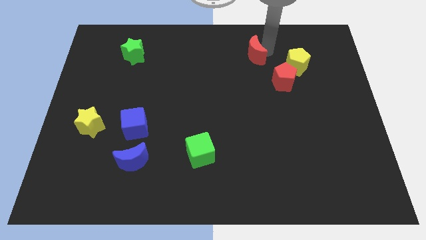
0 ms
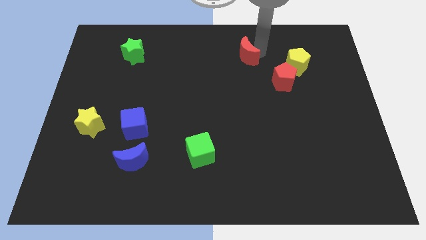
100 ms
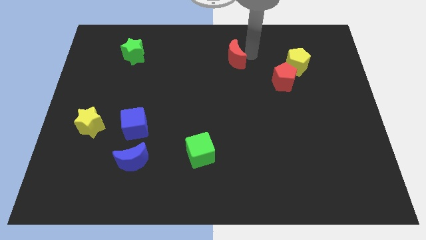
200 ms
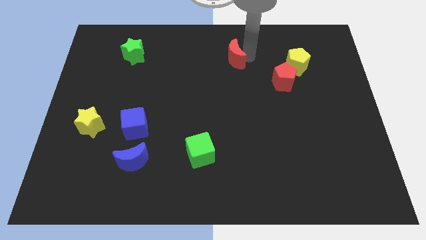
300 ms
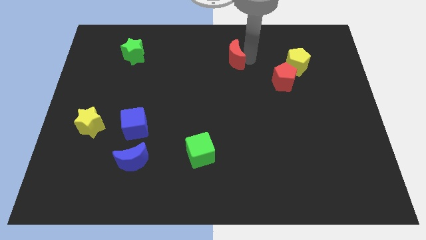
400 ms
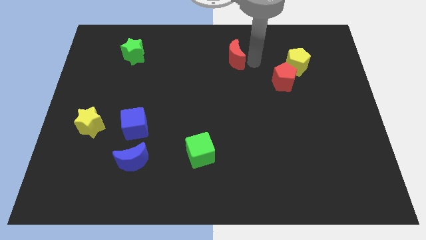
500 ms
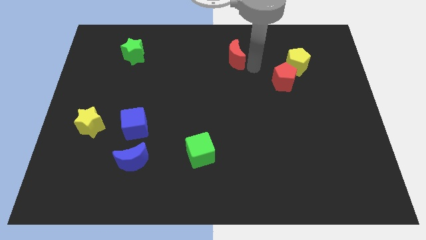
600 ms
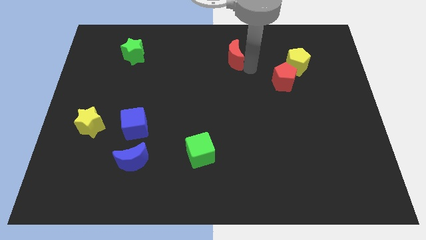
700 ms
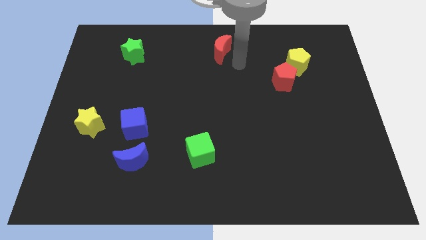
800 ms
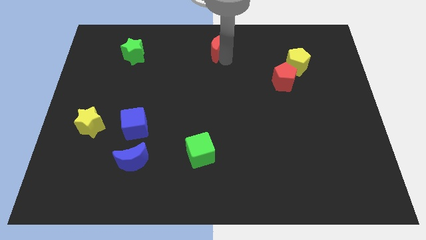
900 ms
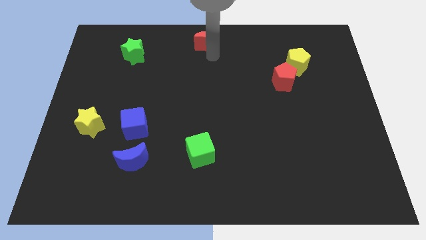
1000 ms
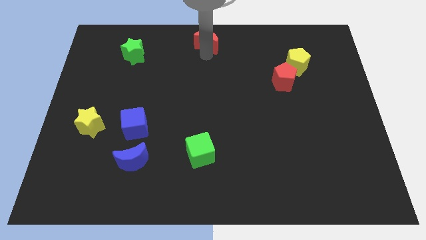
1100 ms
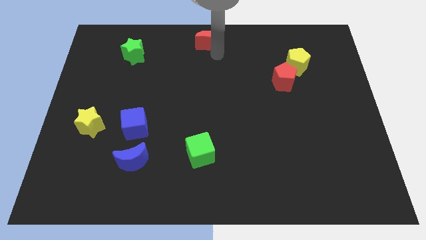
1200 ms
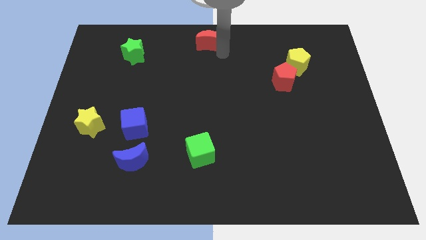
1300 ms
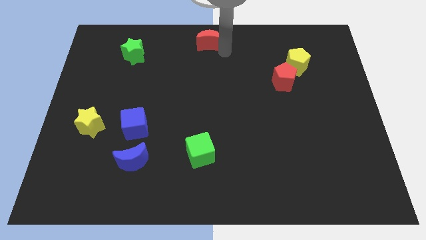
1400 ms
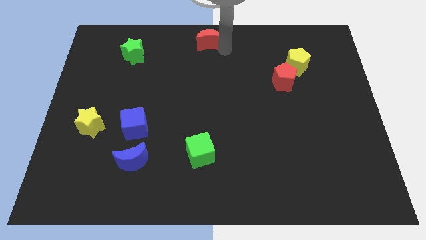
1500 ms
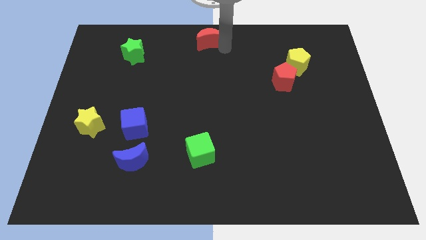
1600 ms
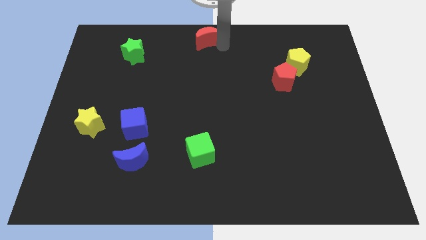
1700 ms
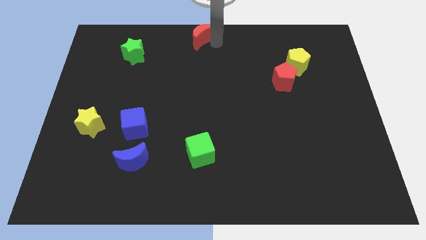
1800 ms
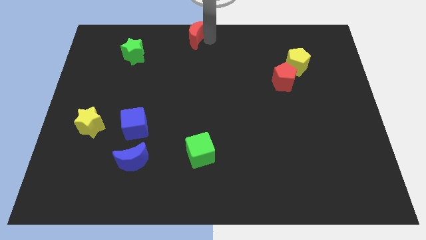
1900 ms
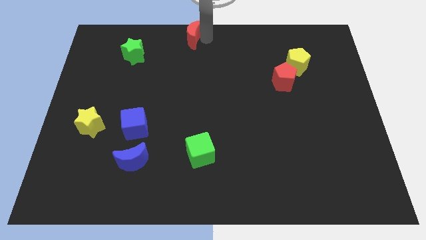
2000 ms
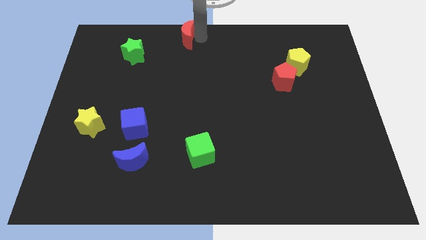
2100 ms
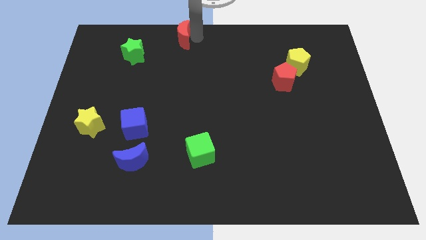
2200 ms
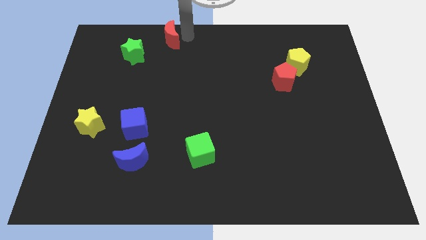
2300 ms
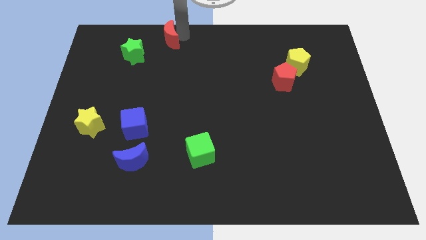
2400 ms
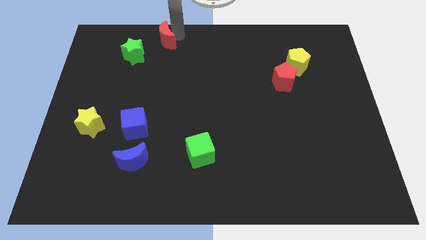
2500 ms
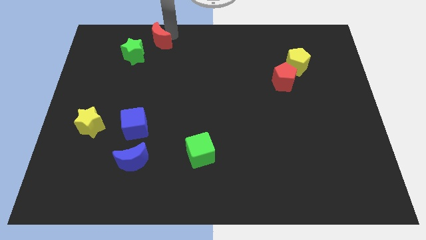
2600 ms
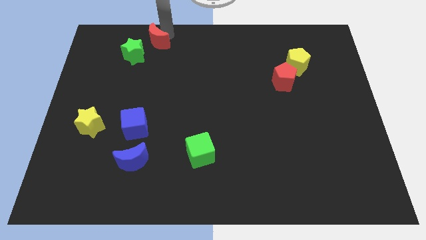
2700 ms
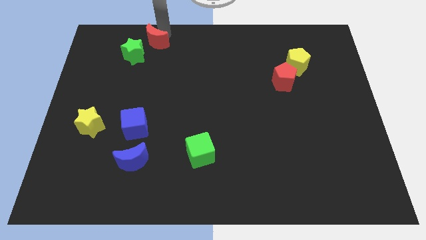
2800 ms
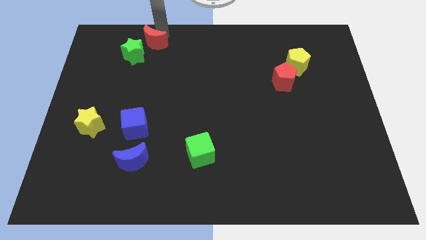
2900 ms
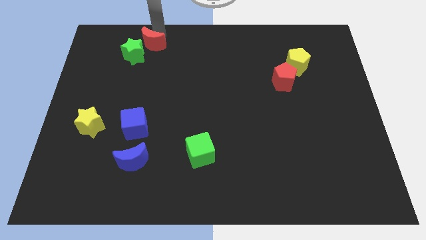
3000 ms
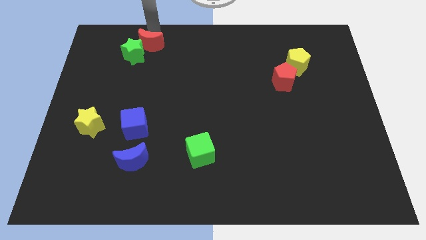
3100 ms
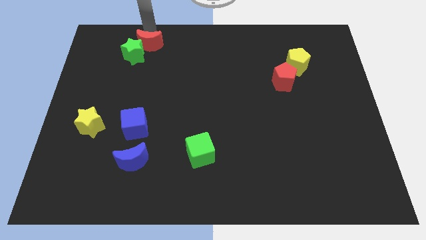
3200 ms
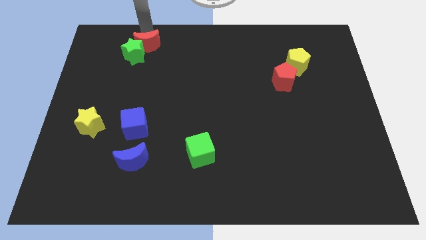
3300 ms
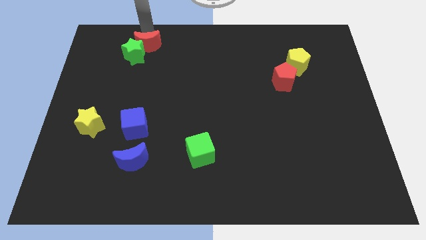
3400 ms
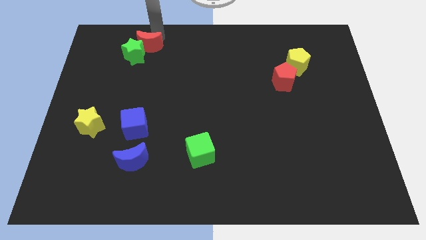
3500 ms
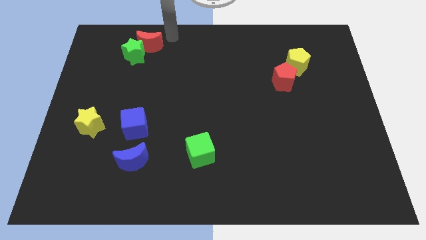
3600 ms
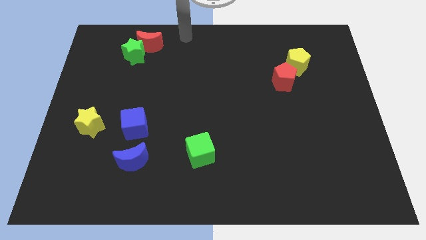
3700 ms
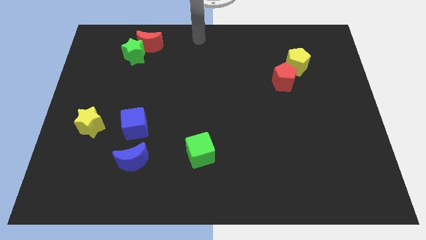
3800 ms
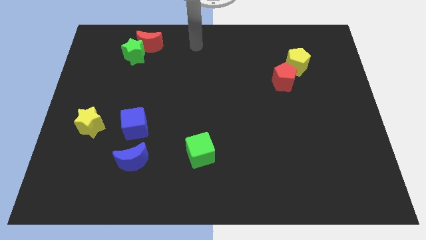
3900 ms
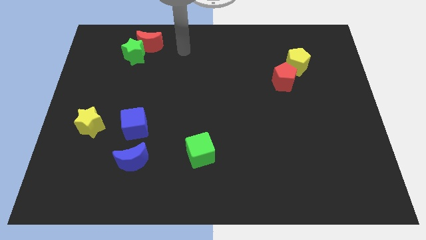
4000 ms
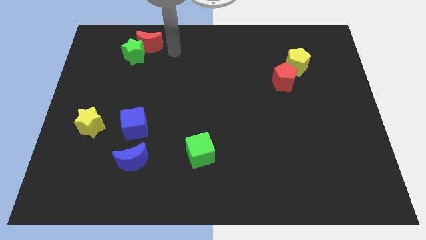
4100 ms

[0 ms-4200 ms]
place the red moon above green star diagonally right

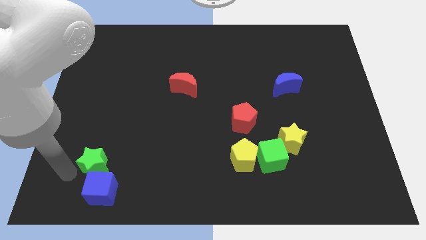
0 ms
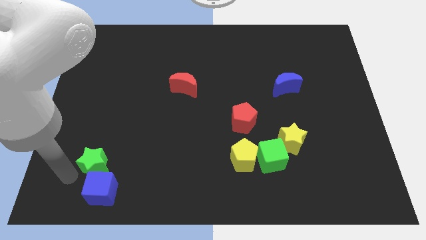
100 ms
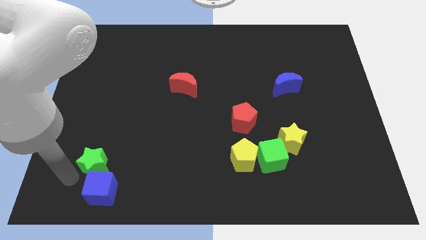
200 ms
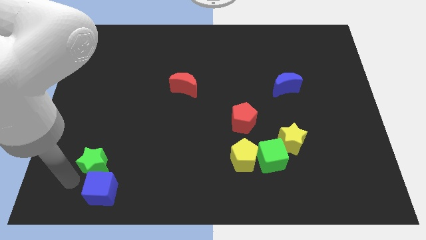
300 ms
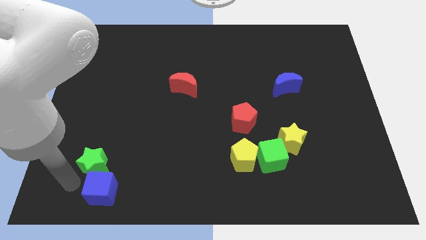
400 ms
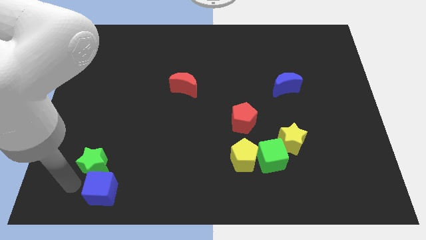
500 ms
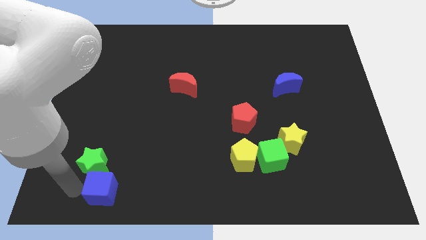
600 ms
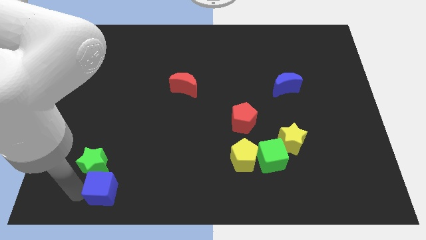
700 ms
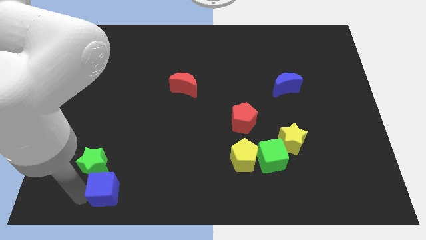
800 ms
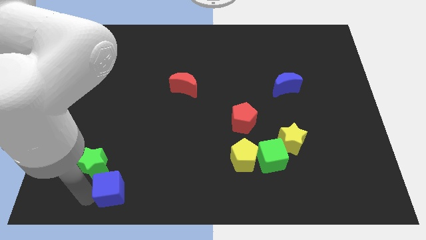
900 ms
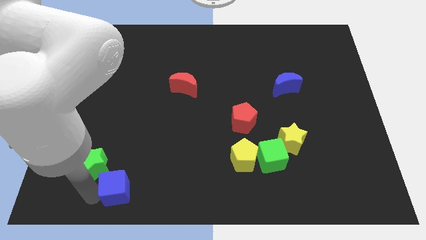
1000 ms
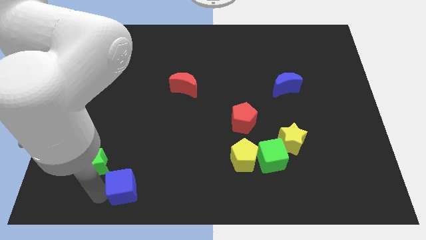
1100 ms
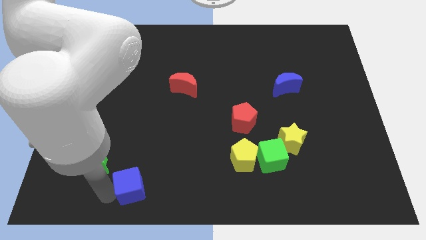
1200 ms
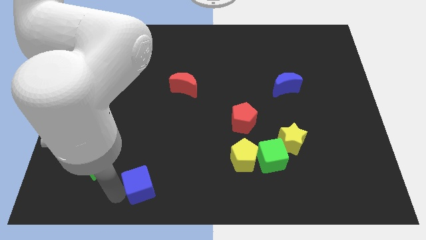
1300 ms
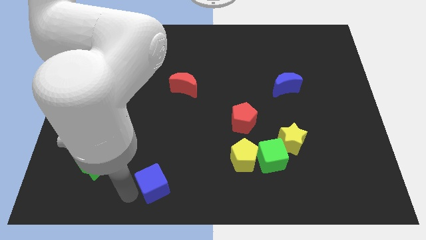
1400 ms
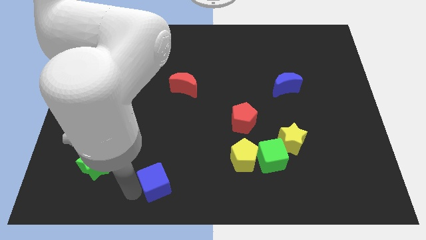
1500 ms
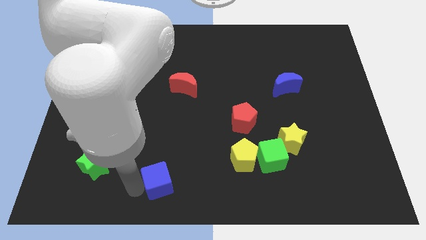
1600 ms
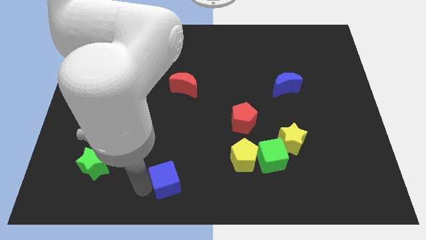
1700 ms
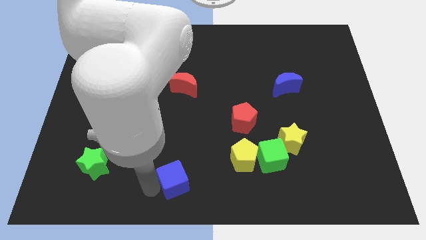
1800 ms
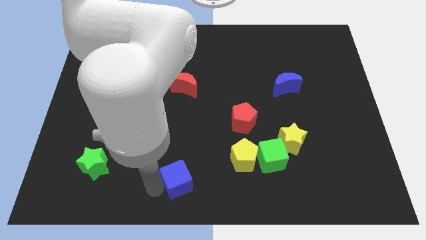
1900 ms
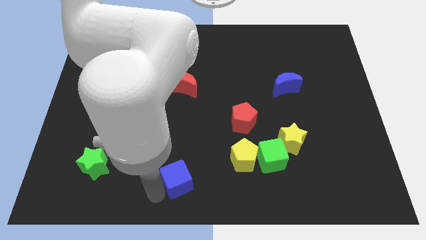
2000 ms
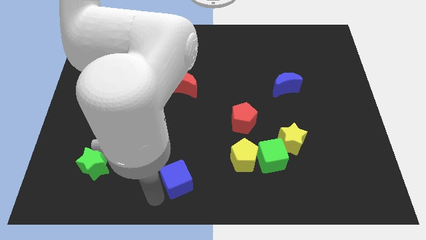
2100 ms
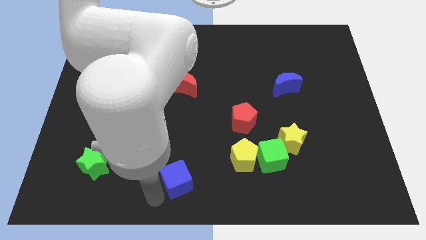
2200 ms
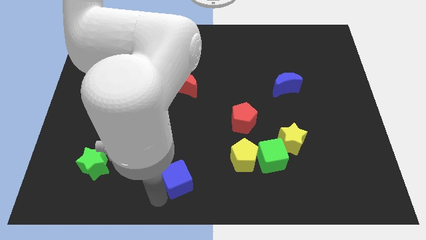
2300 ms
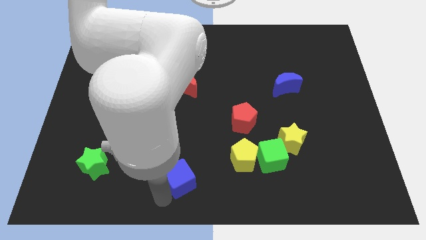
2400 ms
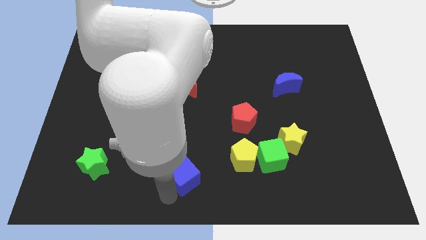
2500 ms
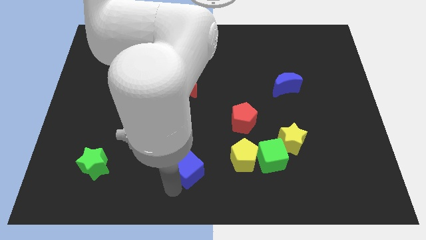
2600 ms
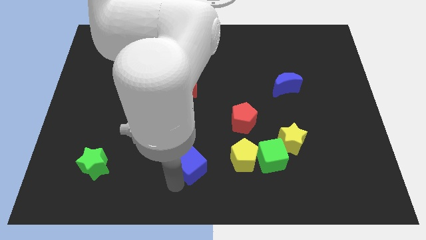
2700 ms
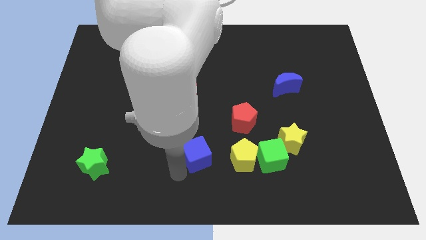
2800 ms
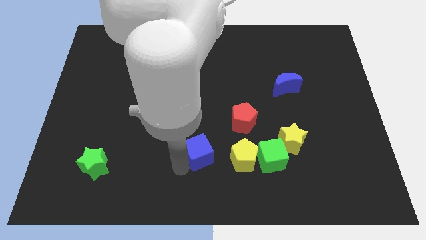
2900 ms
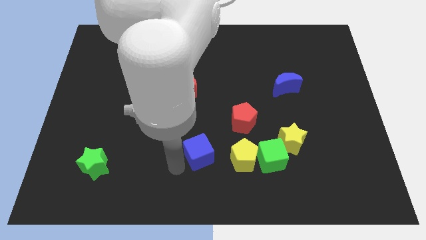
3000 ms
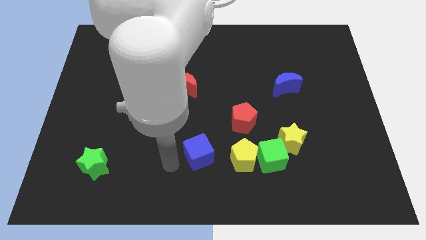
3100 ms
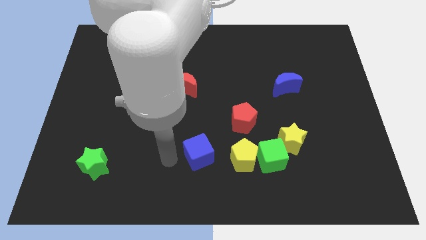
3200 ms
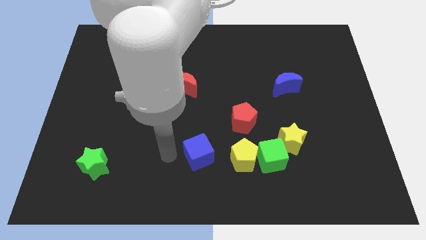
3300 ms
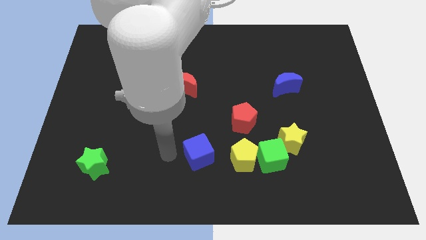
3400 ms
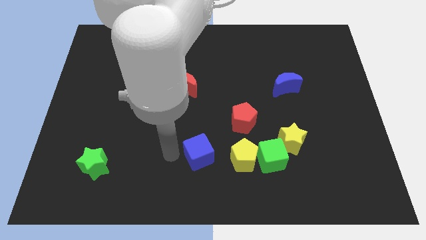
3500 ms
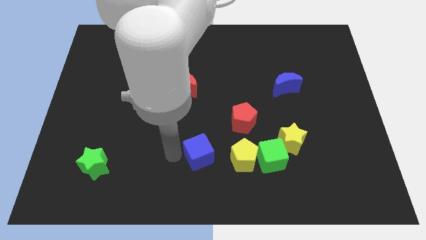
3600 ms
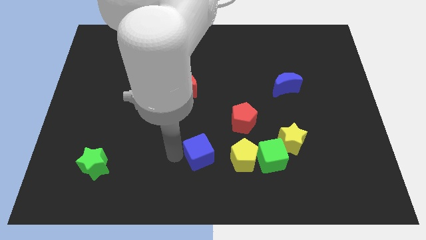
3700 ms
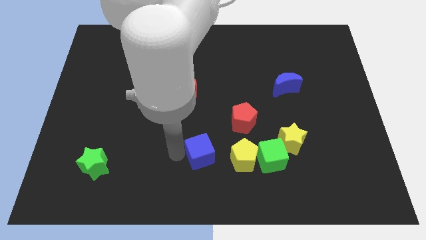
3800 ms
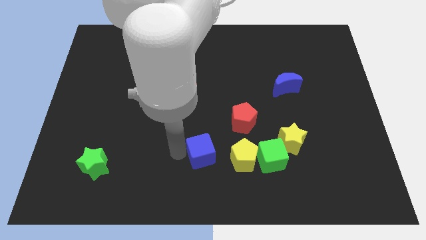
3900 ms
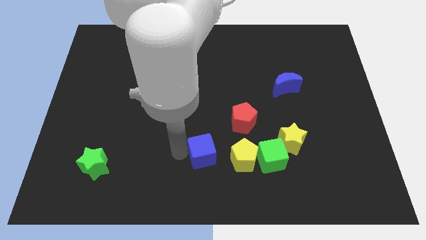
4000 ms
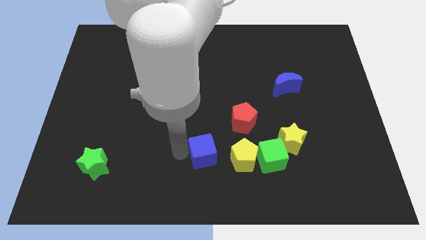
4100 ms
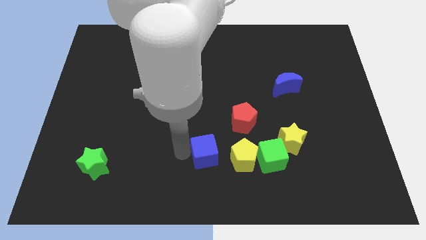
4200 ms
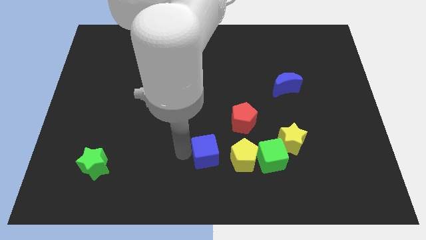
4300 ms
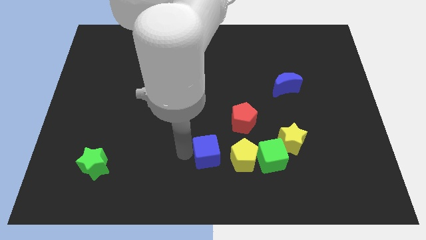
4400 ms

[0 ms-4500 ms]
move the blue cube to the left to the yellow pentagon

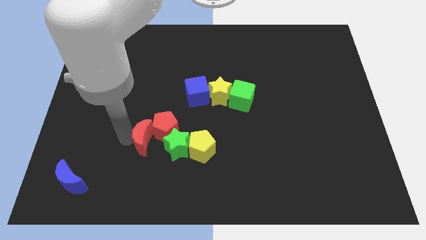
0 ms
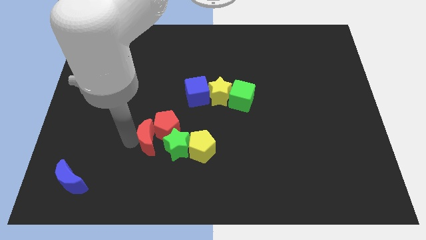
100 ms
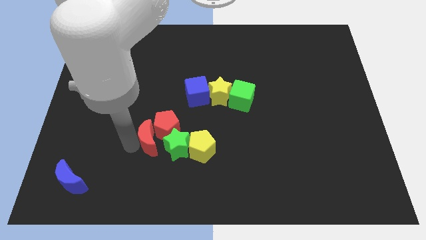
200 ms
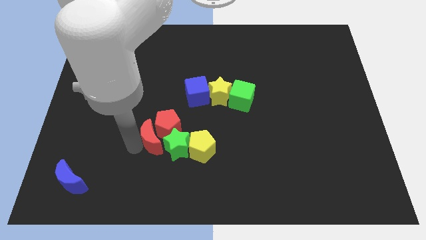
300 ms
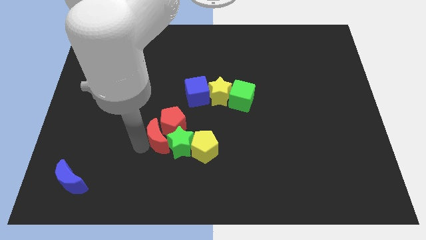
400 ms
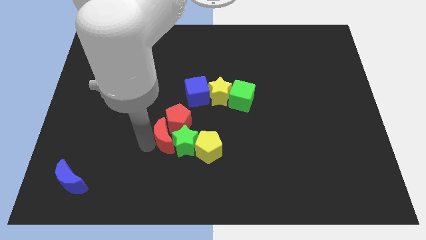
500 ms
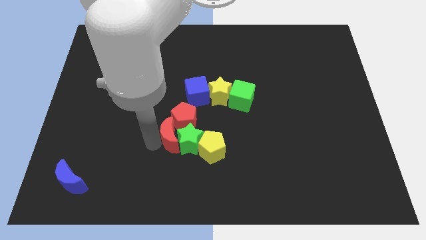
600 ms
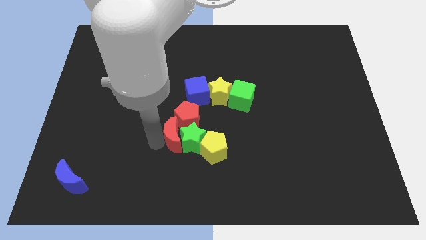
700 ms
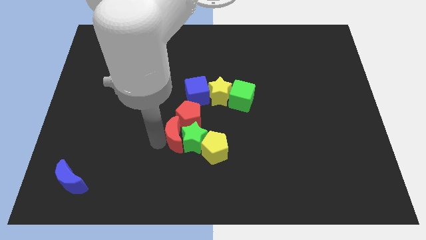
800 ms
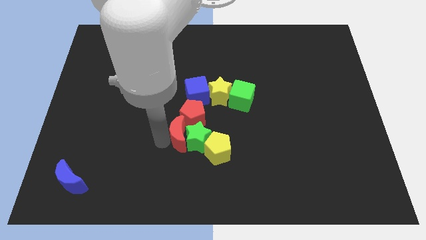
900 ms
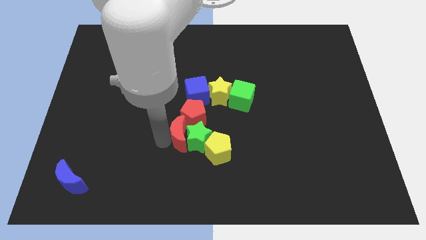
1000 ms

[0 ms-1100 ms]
move the red crescent to the left of the green star
